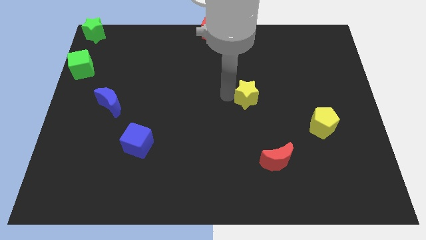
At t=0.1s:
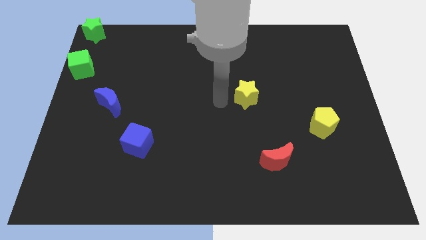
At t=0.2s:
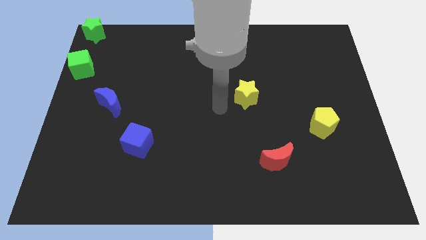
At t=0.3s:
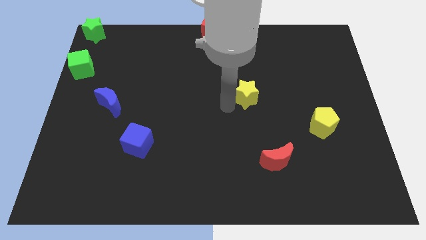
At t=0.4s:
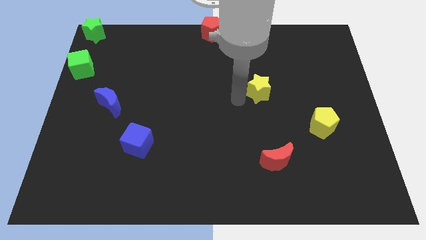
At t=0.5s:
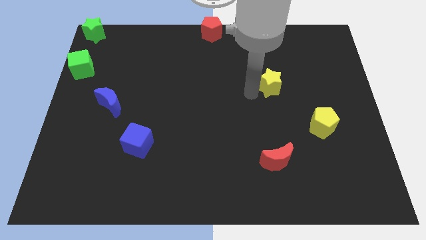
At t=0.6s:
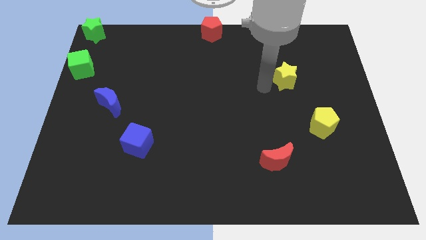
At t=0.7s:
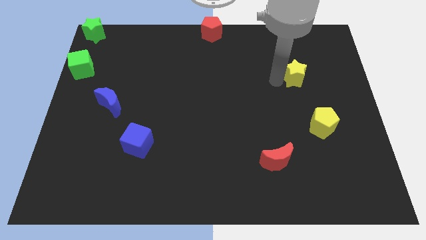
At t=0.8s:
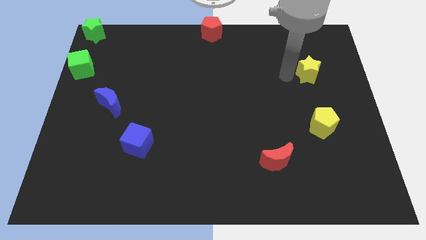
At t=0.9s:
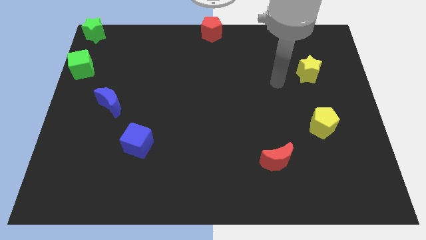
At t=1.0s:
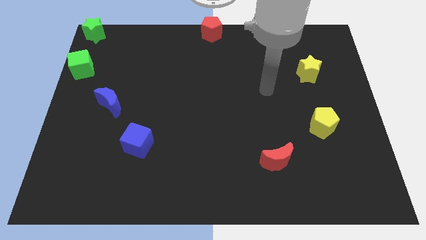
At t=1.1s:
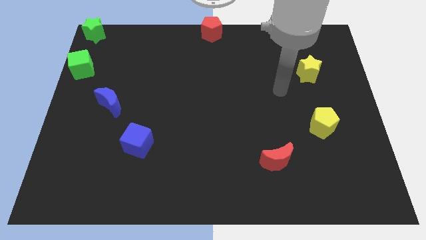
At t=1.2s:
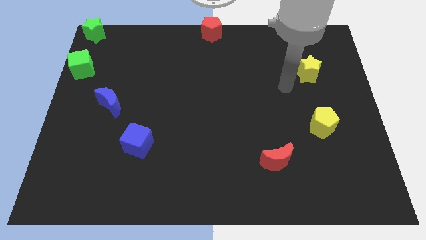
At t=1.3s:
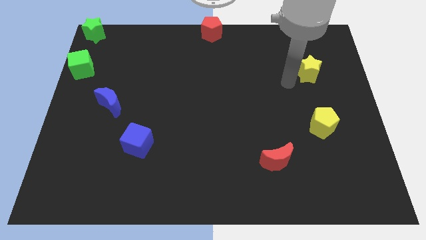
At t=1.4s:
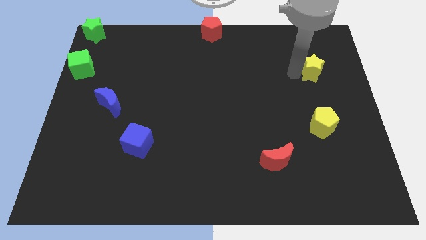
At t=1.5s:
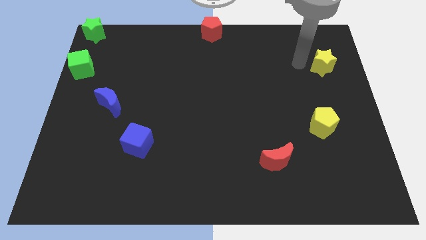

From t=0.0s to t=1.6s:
put the yellow star vertically above the yellow pentagon

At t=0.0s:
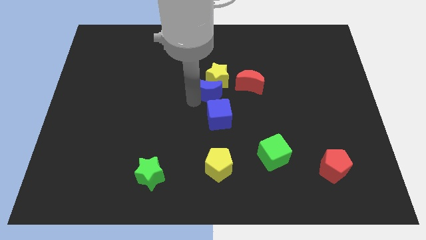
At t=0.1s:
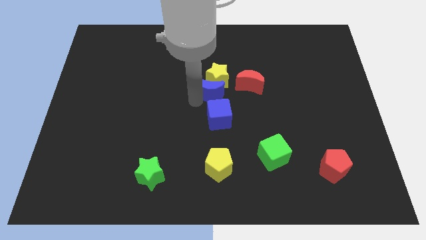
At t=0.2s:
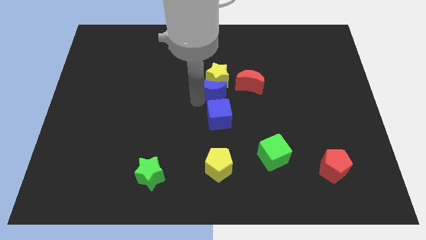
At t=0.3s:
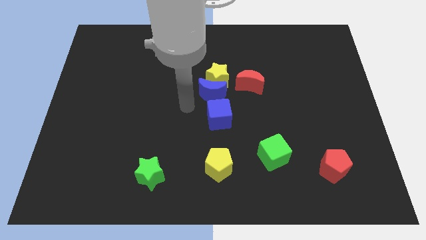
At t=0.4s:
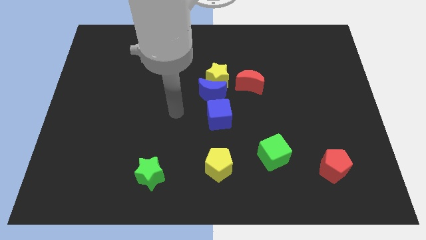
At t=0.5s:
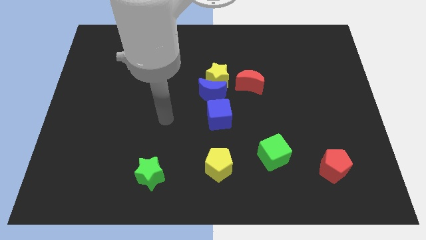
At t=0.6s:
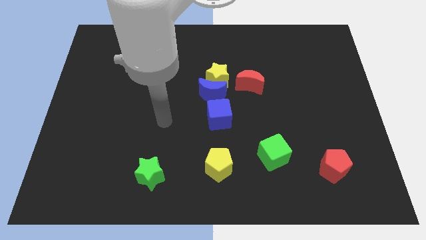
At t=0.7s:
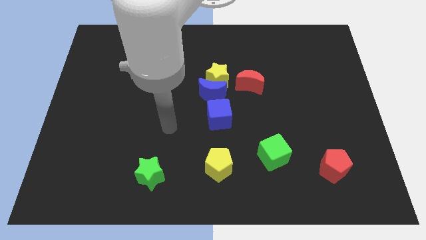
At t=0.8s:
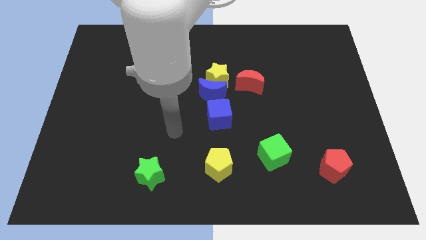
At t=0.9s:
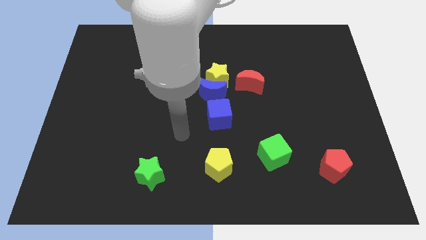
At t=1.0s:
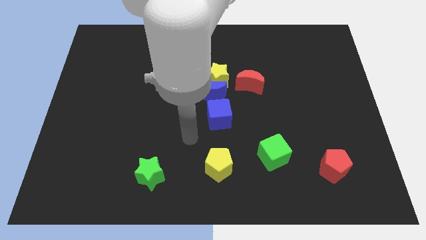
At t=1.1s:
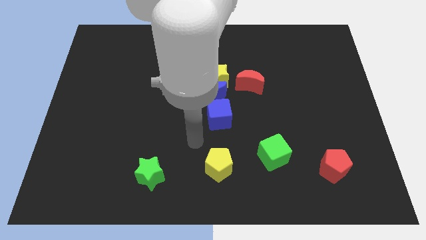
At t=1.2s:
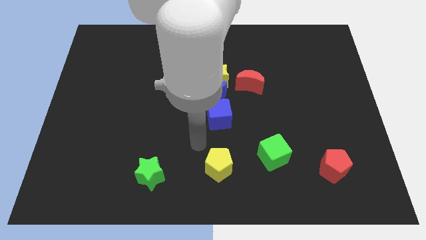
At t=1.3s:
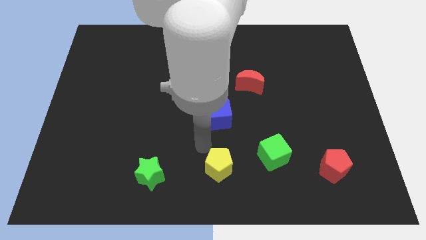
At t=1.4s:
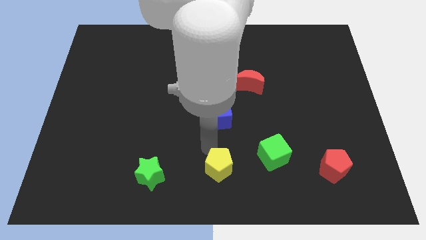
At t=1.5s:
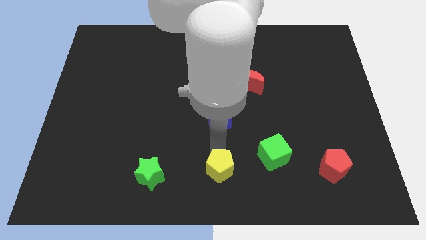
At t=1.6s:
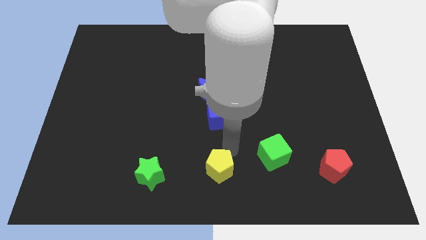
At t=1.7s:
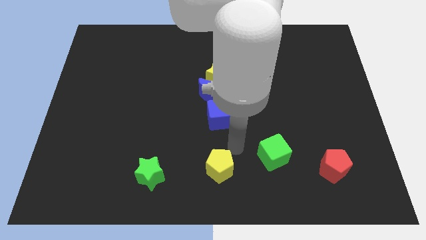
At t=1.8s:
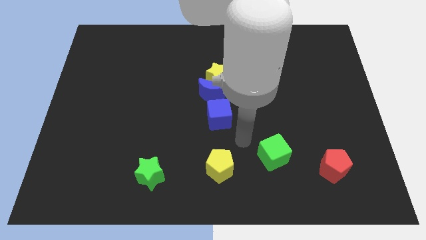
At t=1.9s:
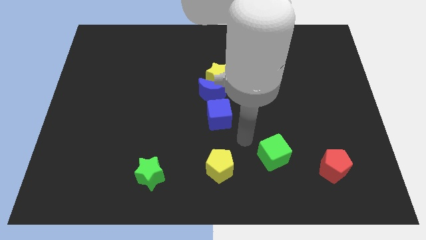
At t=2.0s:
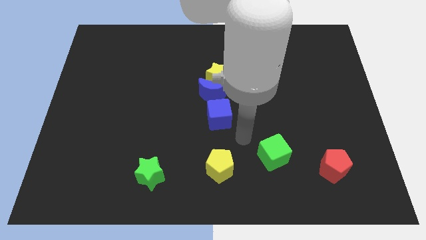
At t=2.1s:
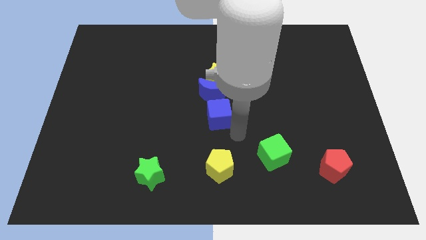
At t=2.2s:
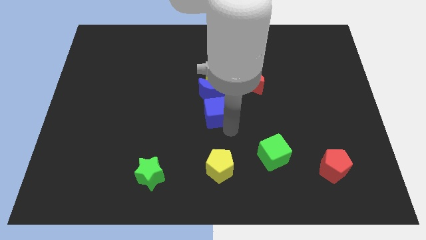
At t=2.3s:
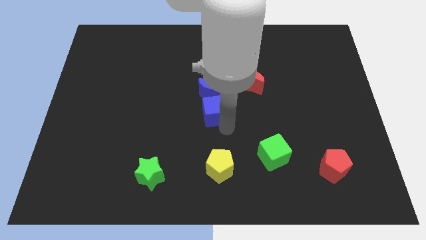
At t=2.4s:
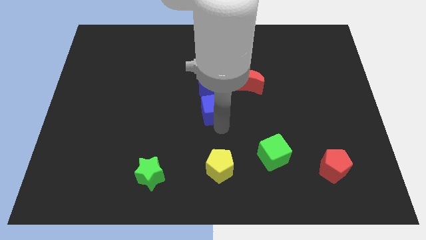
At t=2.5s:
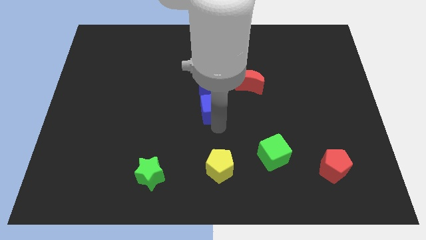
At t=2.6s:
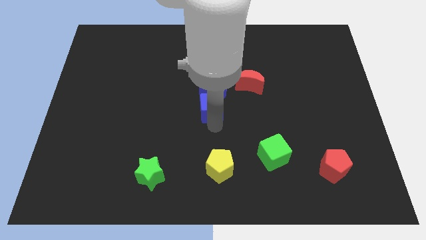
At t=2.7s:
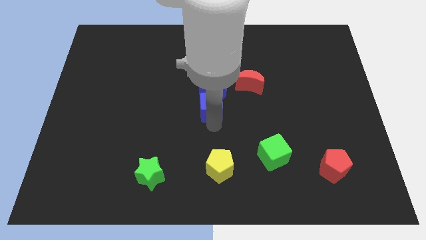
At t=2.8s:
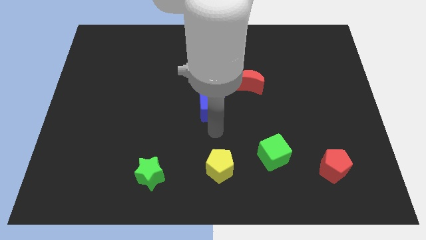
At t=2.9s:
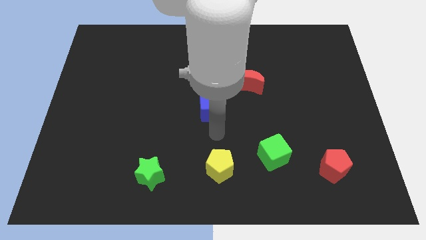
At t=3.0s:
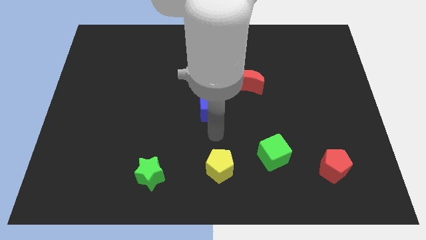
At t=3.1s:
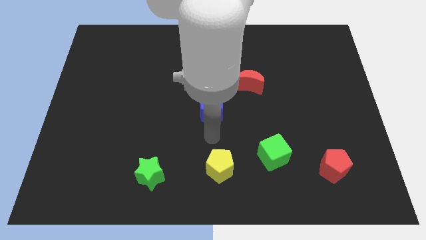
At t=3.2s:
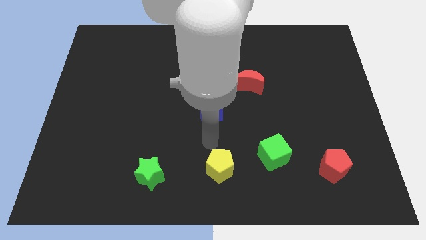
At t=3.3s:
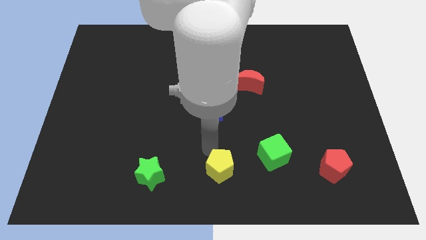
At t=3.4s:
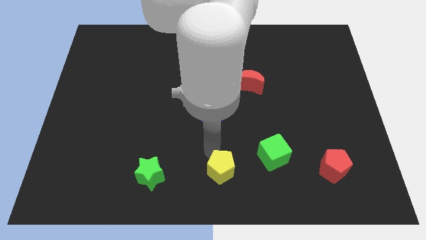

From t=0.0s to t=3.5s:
push the blue cube into the blue crescent

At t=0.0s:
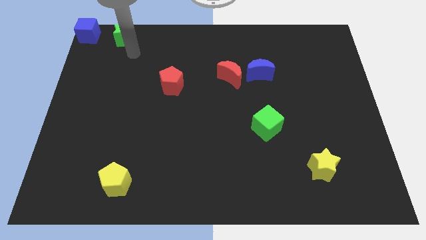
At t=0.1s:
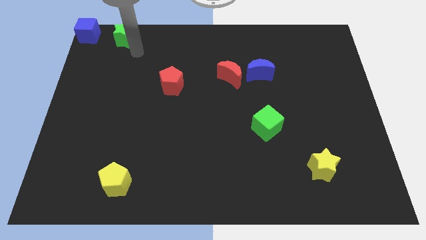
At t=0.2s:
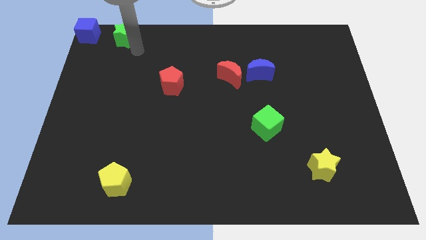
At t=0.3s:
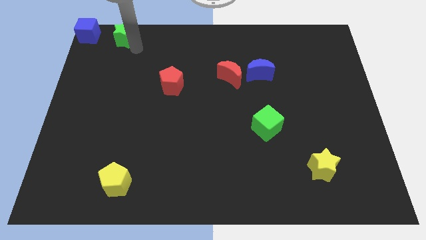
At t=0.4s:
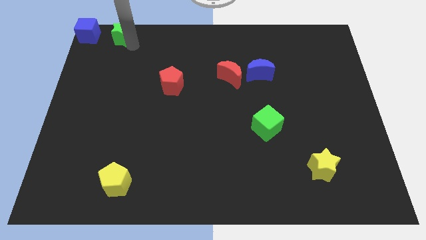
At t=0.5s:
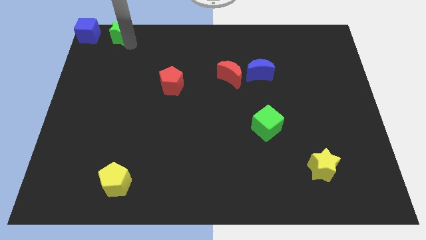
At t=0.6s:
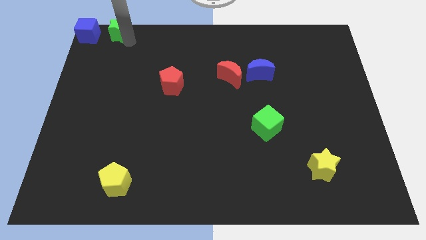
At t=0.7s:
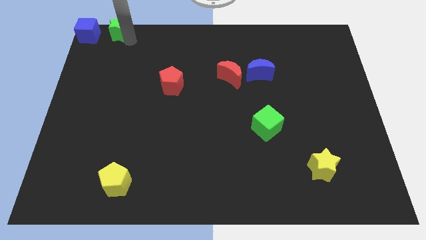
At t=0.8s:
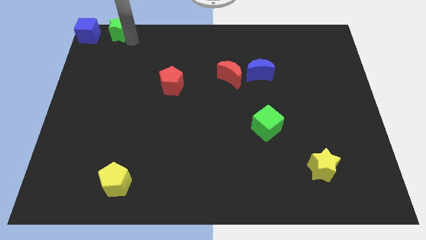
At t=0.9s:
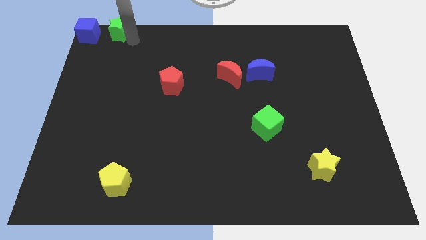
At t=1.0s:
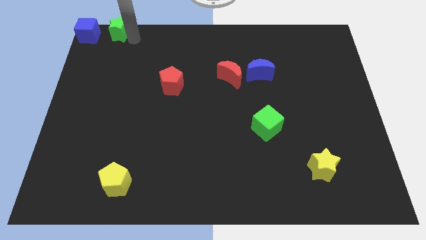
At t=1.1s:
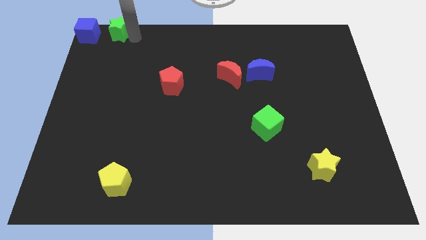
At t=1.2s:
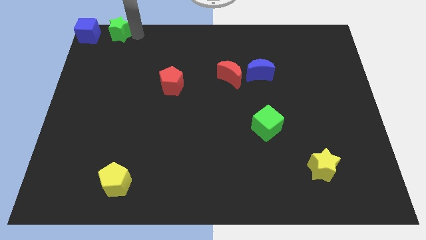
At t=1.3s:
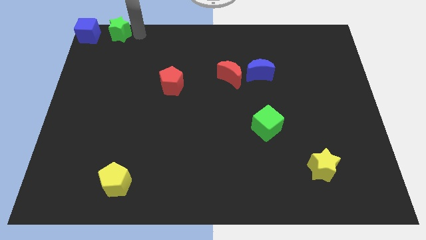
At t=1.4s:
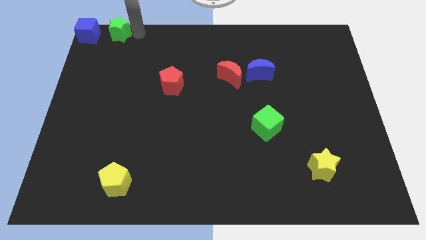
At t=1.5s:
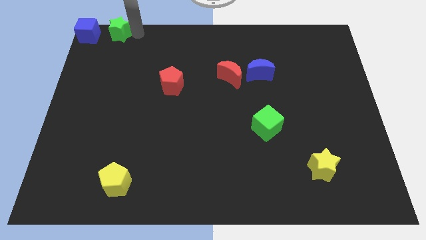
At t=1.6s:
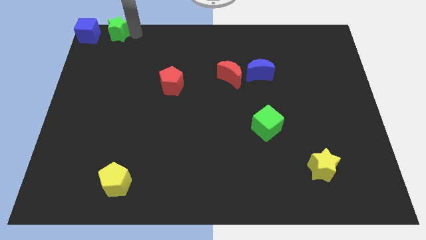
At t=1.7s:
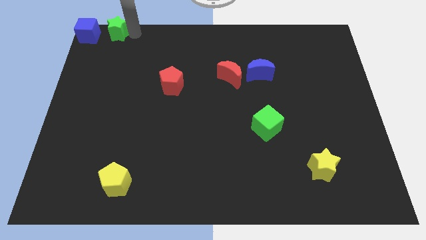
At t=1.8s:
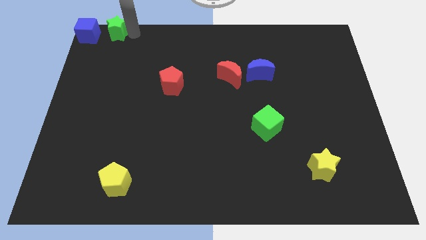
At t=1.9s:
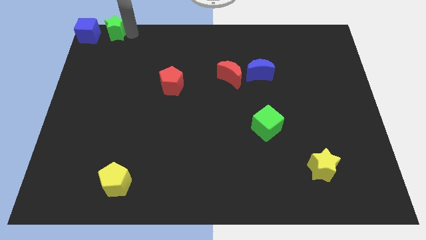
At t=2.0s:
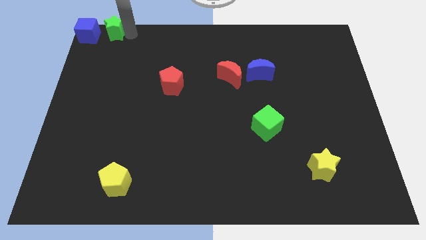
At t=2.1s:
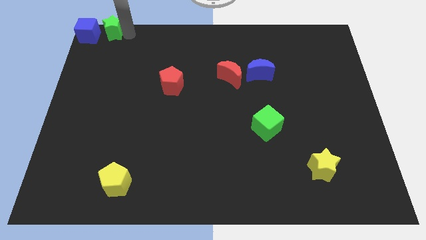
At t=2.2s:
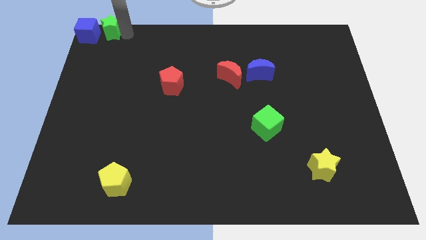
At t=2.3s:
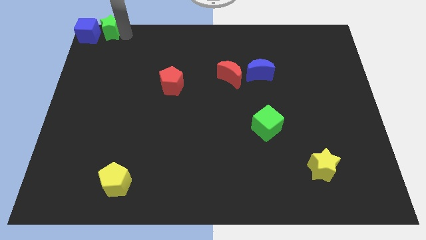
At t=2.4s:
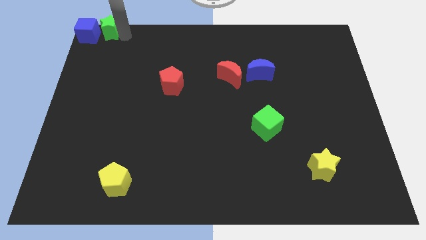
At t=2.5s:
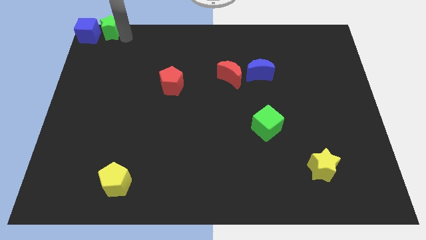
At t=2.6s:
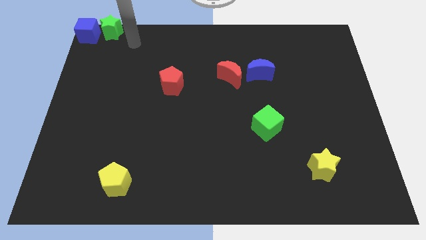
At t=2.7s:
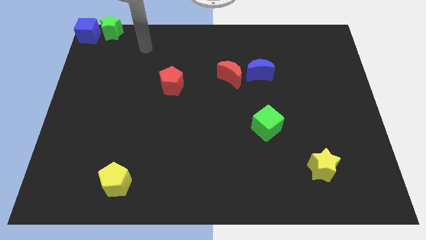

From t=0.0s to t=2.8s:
move your arm towards the red crescent

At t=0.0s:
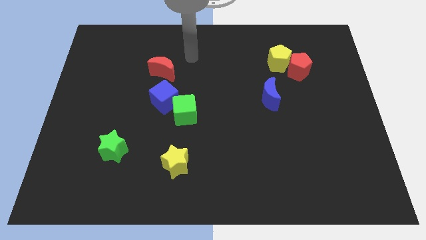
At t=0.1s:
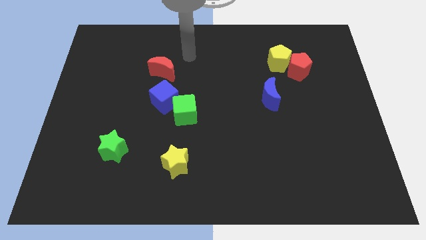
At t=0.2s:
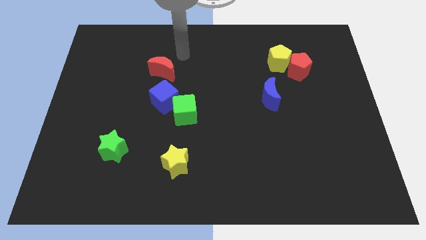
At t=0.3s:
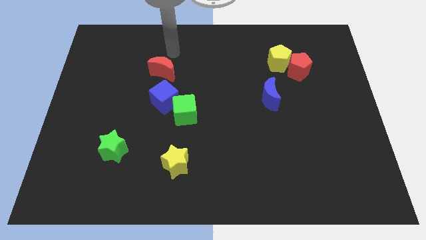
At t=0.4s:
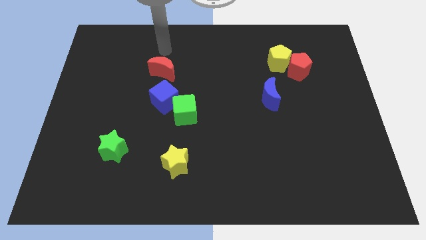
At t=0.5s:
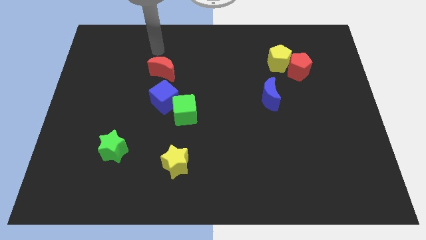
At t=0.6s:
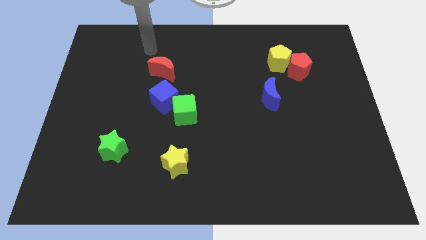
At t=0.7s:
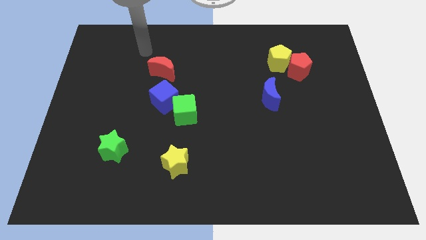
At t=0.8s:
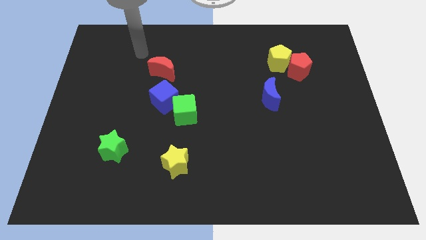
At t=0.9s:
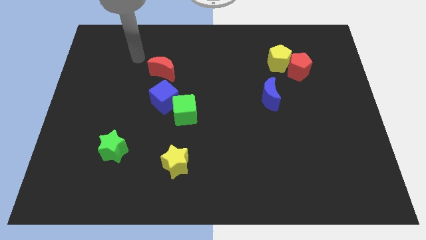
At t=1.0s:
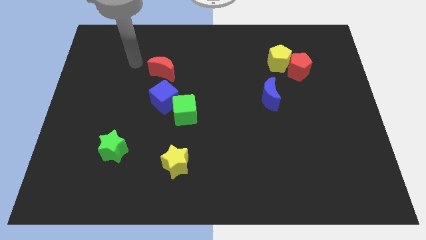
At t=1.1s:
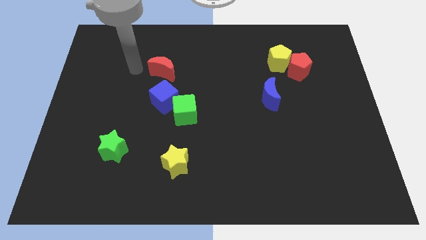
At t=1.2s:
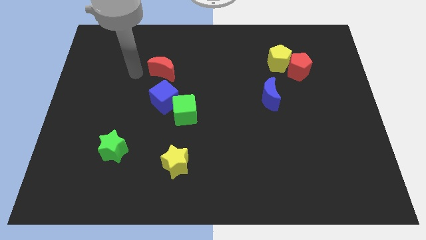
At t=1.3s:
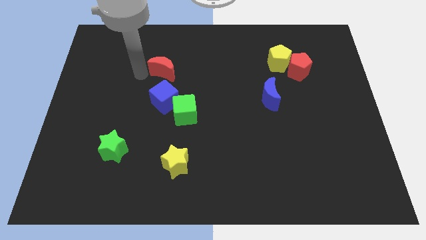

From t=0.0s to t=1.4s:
move your arm to the left of the red crescent
